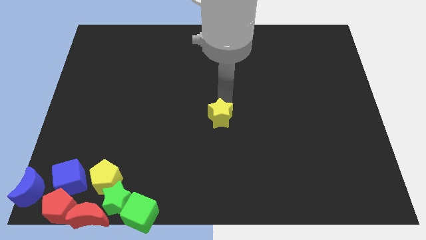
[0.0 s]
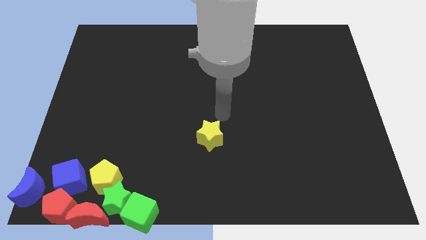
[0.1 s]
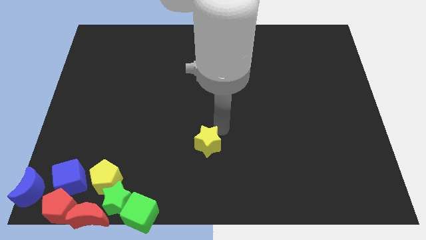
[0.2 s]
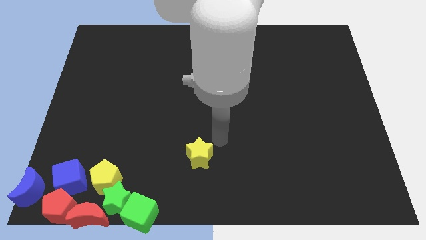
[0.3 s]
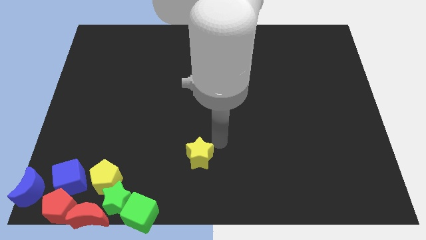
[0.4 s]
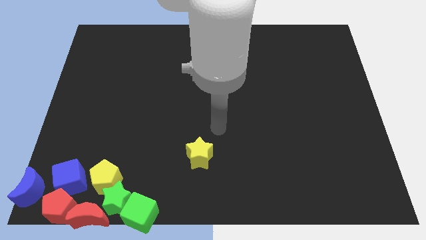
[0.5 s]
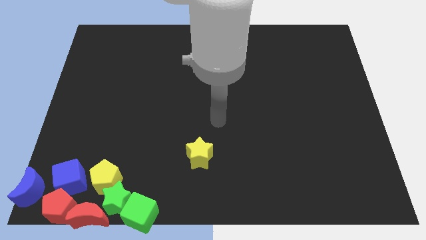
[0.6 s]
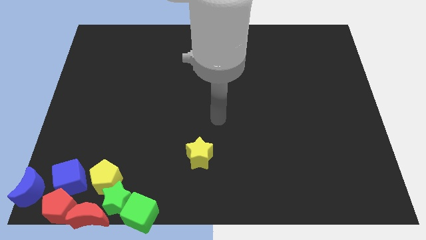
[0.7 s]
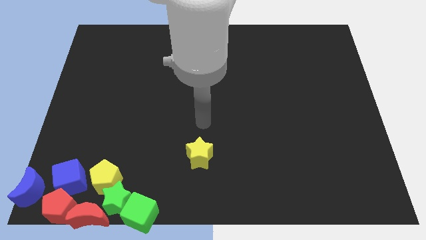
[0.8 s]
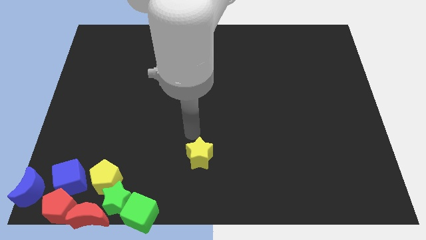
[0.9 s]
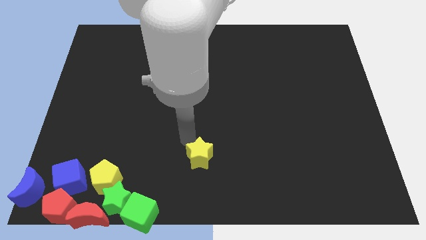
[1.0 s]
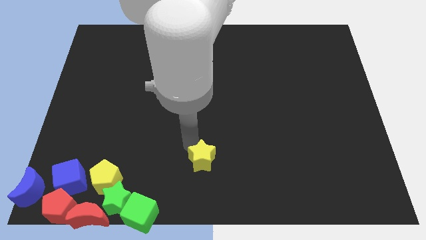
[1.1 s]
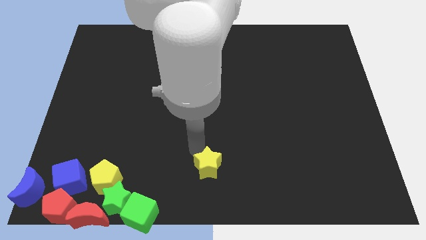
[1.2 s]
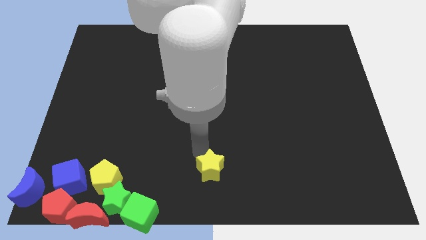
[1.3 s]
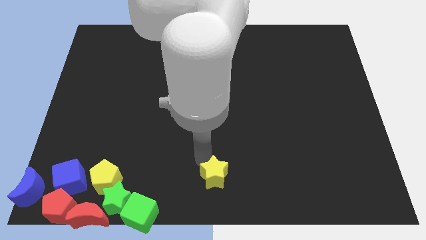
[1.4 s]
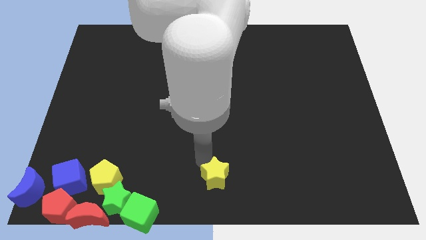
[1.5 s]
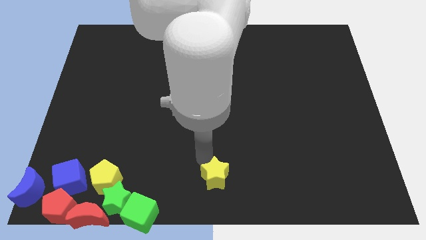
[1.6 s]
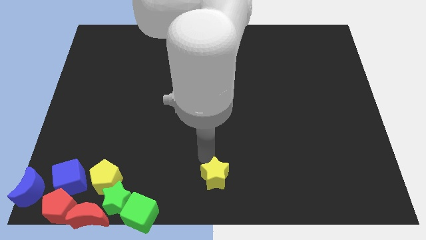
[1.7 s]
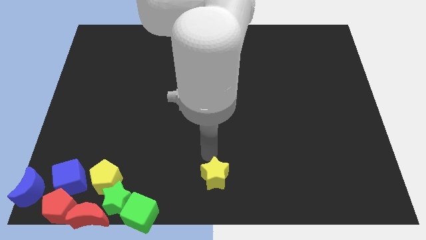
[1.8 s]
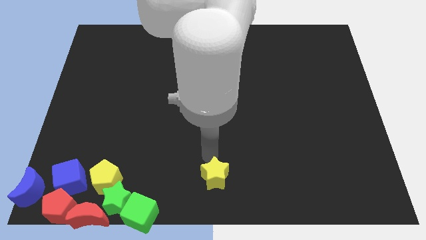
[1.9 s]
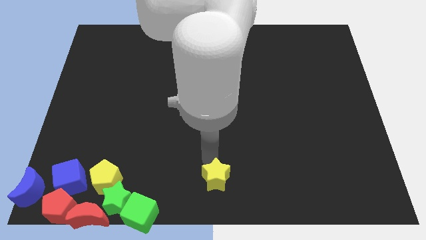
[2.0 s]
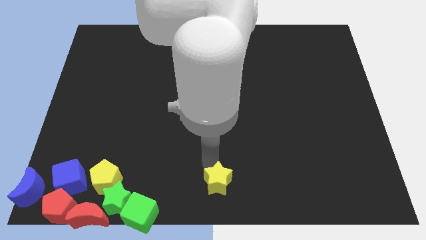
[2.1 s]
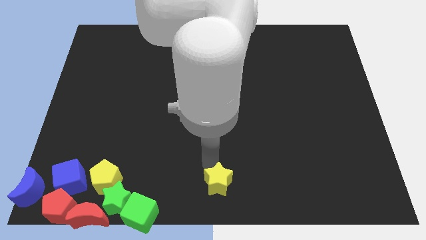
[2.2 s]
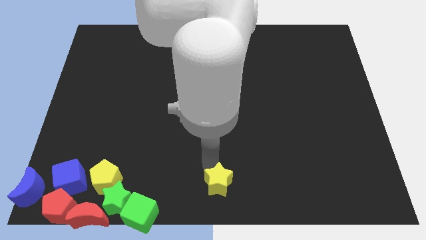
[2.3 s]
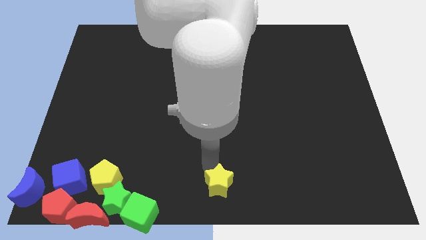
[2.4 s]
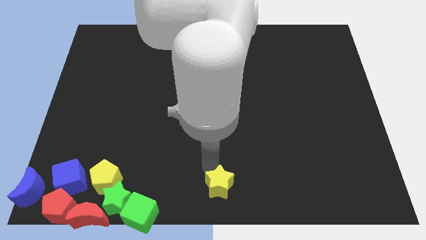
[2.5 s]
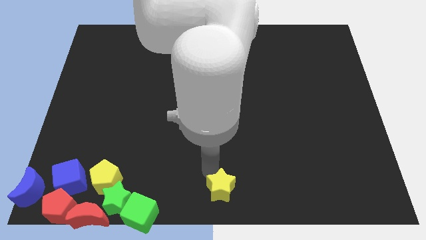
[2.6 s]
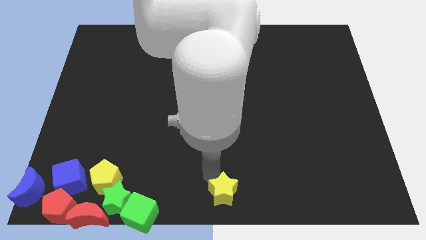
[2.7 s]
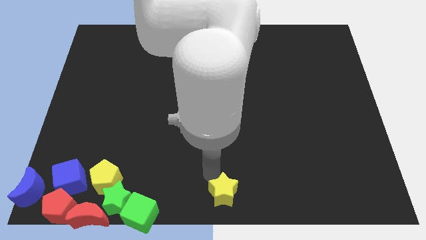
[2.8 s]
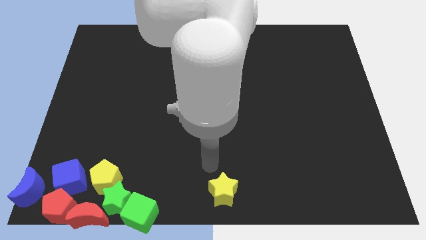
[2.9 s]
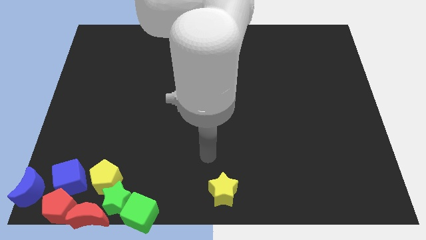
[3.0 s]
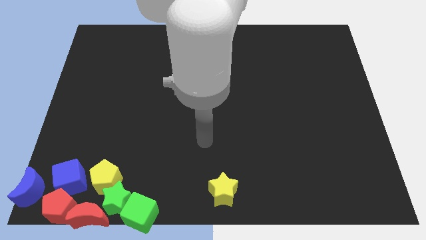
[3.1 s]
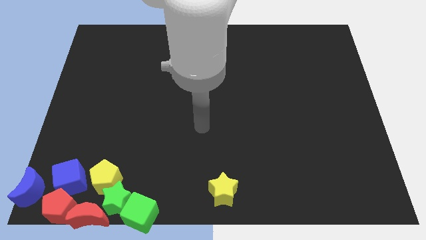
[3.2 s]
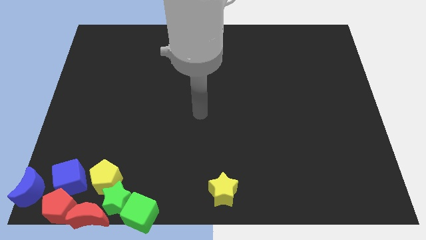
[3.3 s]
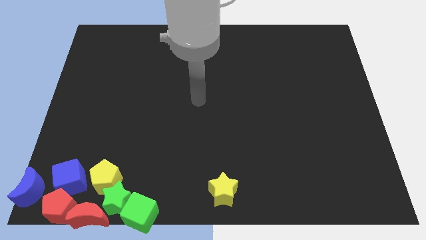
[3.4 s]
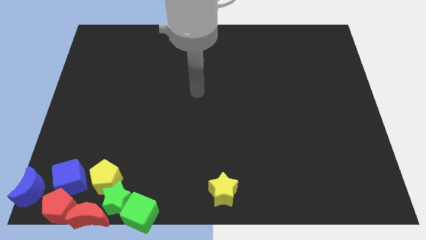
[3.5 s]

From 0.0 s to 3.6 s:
put the yellow at the right side of the group of blocks

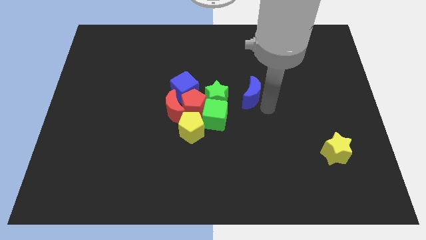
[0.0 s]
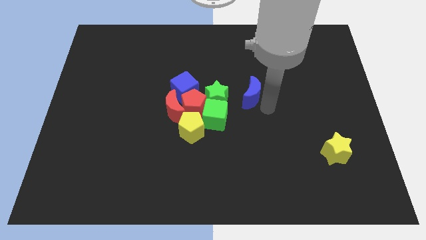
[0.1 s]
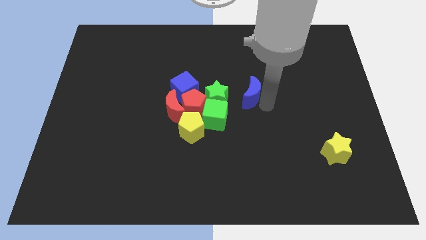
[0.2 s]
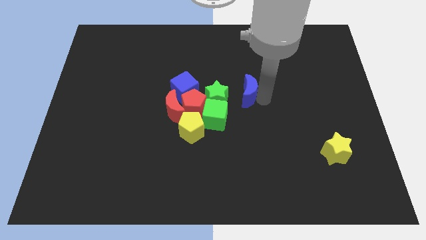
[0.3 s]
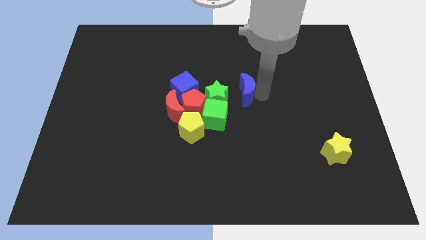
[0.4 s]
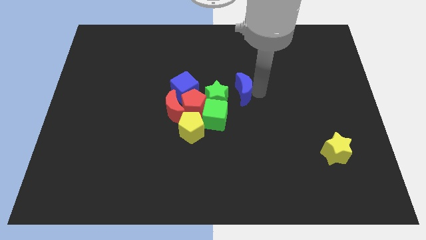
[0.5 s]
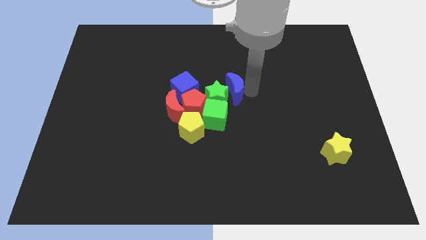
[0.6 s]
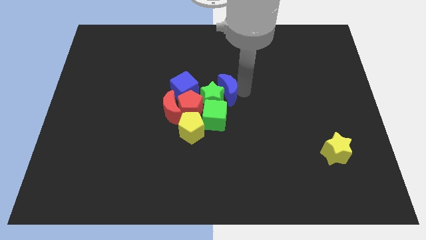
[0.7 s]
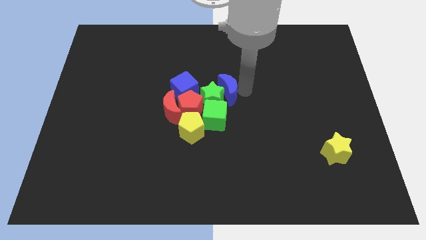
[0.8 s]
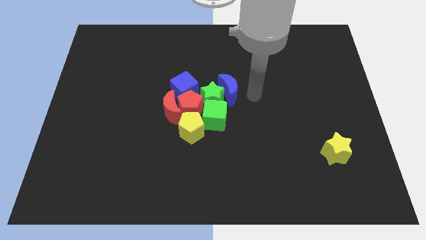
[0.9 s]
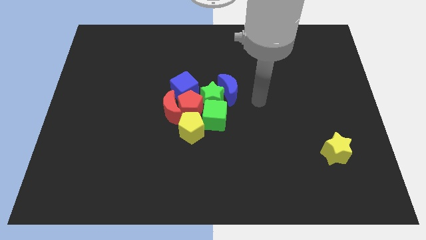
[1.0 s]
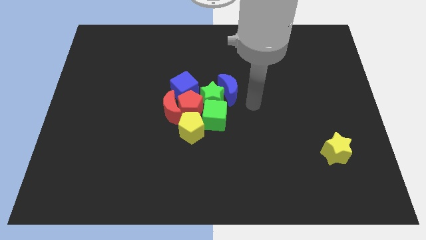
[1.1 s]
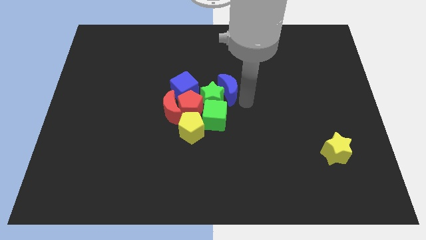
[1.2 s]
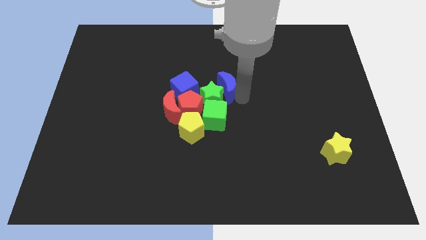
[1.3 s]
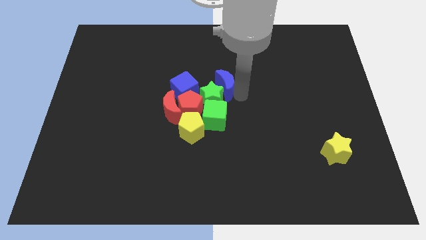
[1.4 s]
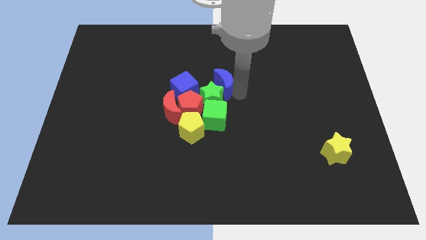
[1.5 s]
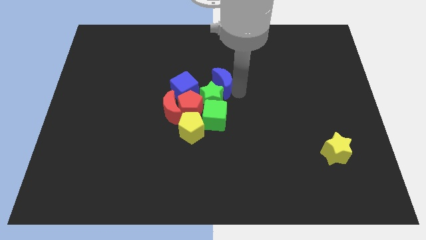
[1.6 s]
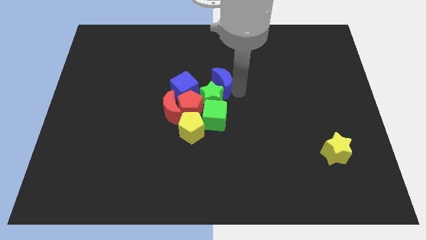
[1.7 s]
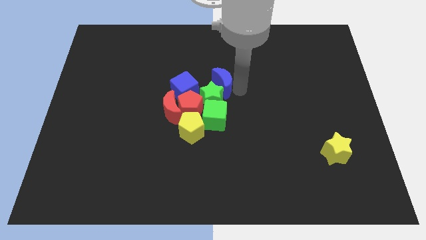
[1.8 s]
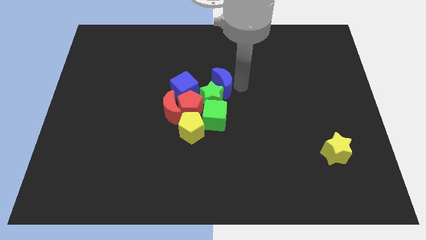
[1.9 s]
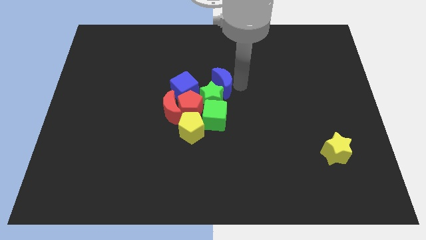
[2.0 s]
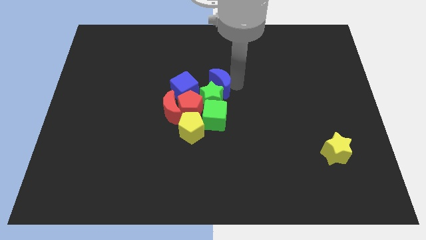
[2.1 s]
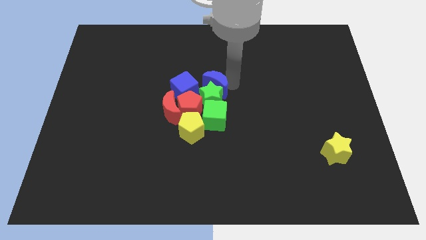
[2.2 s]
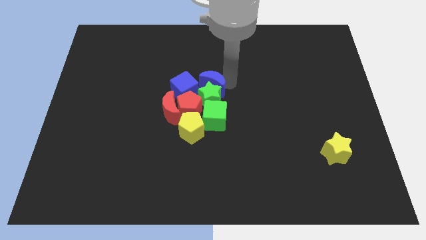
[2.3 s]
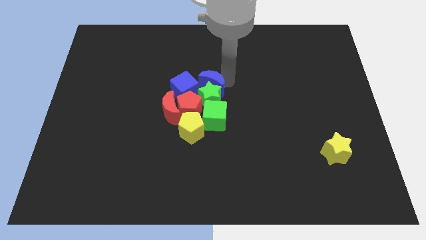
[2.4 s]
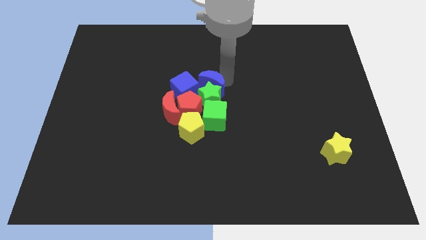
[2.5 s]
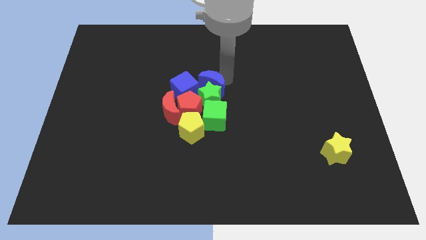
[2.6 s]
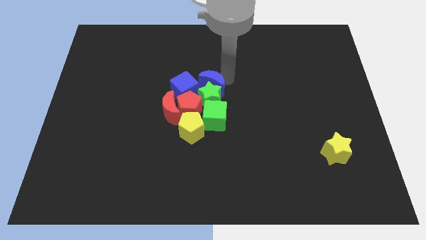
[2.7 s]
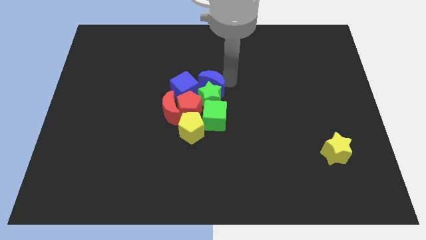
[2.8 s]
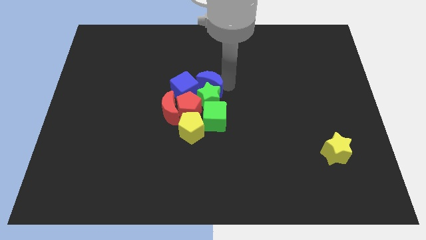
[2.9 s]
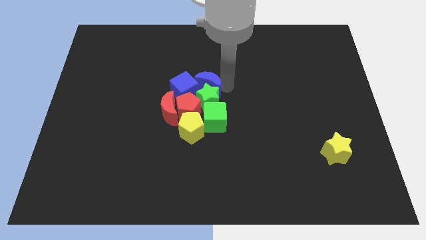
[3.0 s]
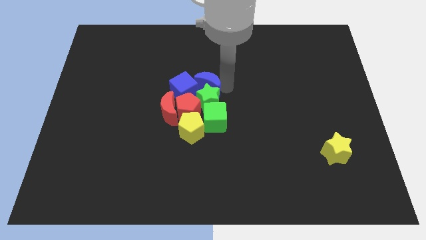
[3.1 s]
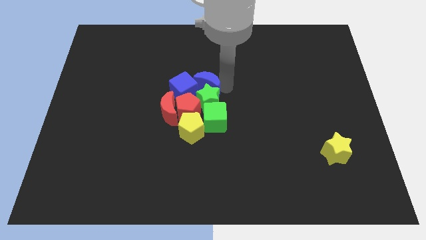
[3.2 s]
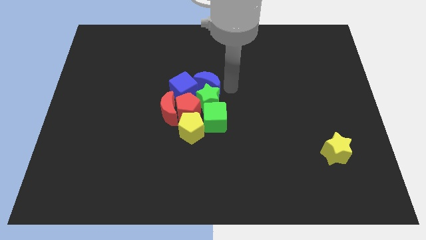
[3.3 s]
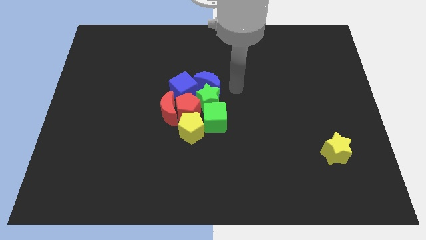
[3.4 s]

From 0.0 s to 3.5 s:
move the blue crescent into the green star

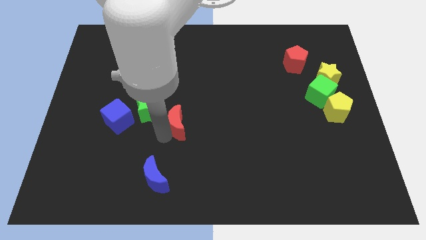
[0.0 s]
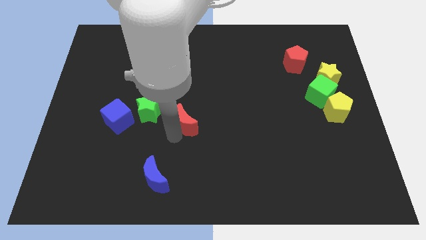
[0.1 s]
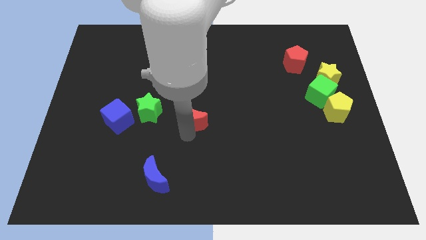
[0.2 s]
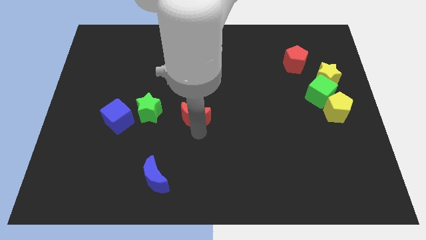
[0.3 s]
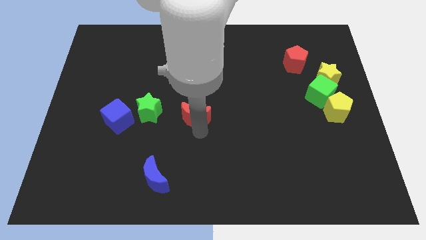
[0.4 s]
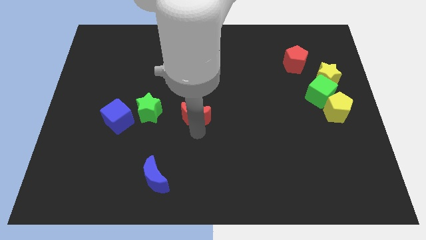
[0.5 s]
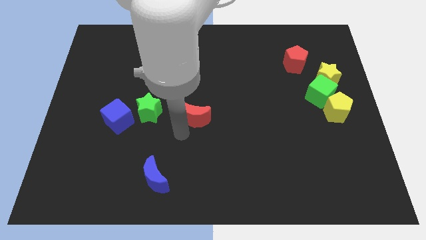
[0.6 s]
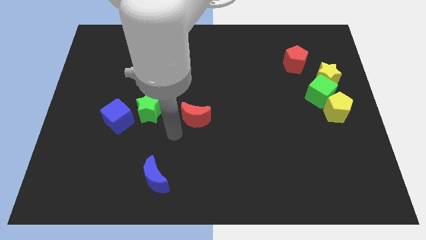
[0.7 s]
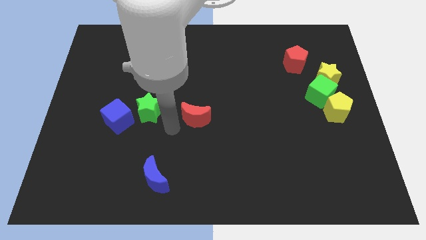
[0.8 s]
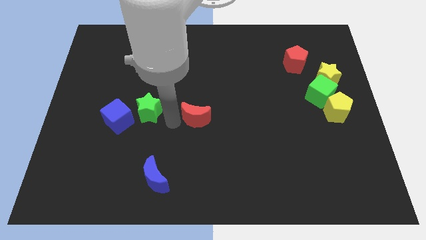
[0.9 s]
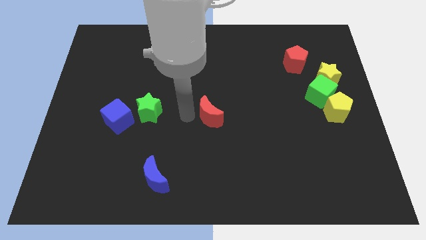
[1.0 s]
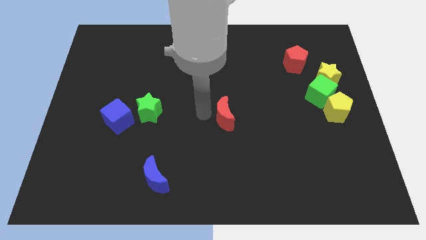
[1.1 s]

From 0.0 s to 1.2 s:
push the red crescent to the center of the board

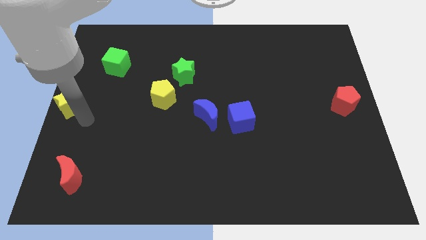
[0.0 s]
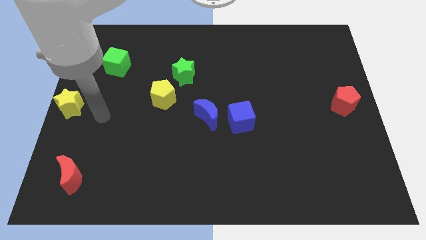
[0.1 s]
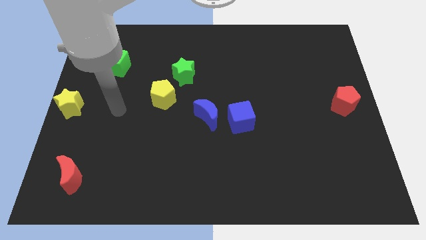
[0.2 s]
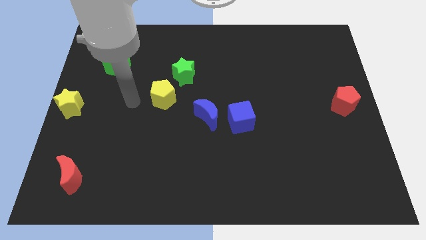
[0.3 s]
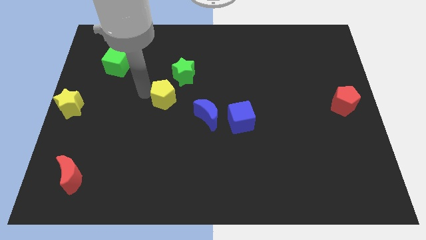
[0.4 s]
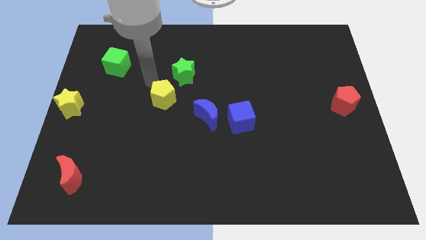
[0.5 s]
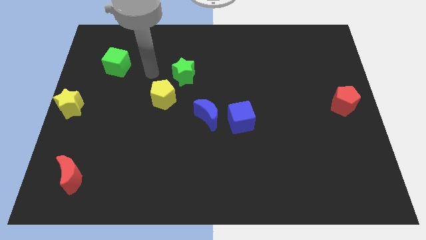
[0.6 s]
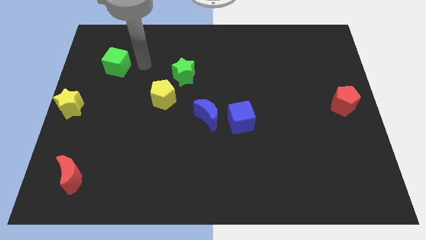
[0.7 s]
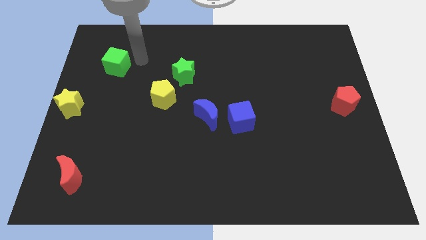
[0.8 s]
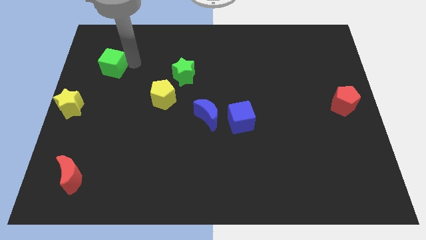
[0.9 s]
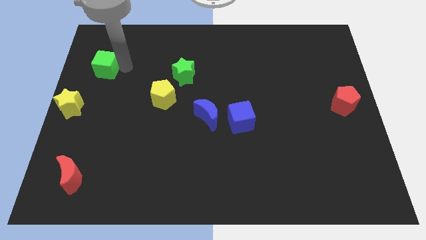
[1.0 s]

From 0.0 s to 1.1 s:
touch the green cube on its top
